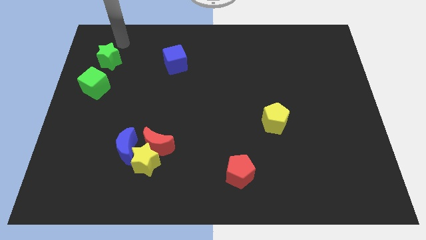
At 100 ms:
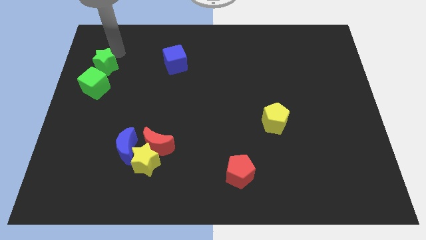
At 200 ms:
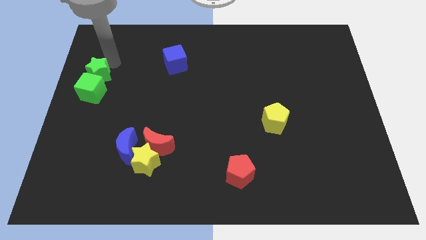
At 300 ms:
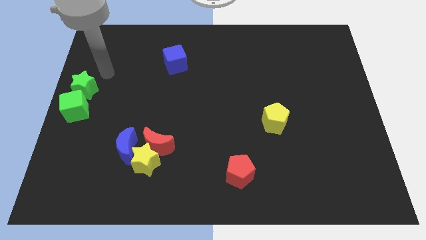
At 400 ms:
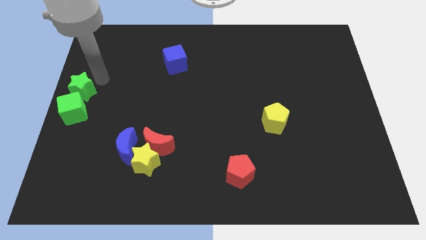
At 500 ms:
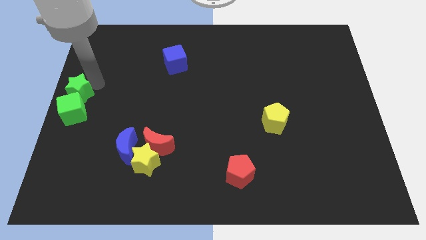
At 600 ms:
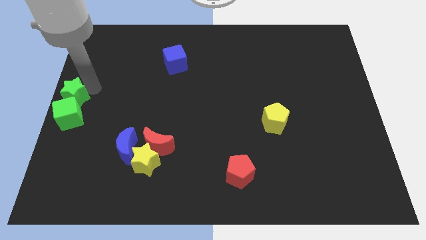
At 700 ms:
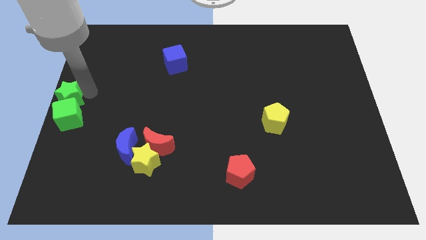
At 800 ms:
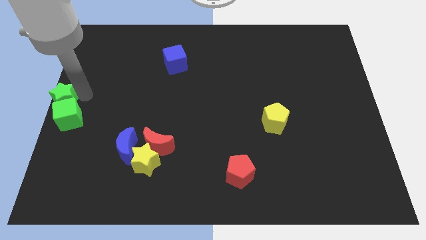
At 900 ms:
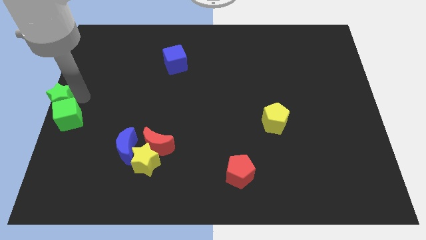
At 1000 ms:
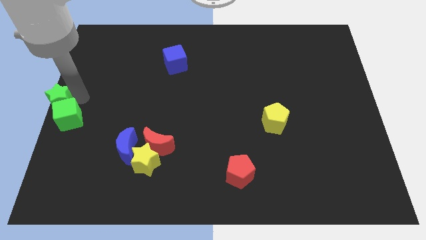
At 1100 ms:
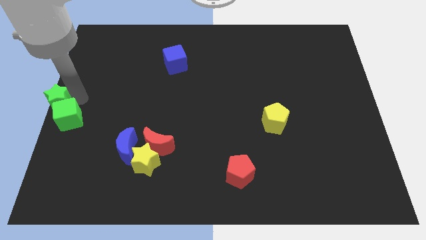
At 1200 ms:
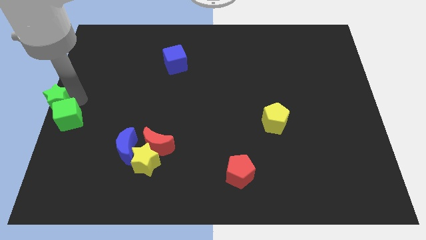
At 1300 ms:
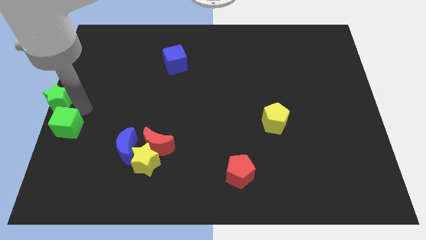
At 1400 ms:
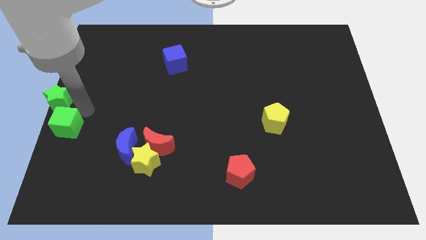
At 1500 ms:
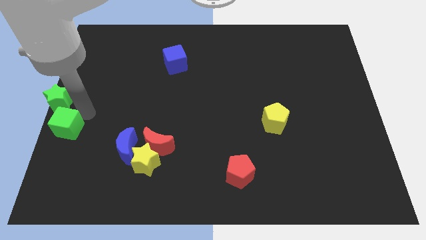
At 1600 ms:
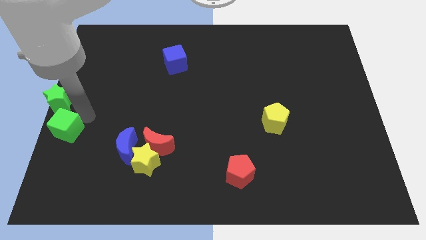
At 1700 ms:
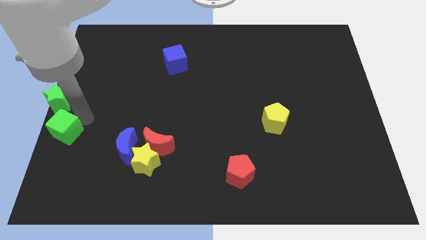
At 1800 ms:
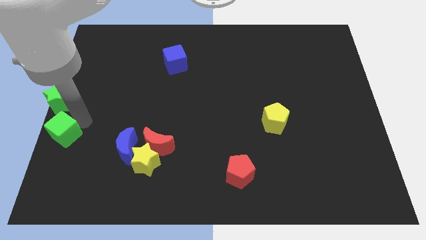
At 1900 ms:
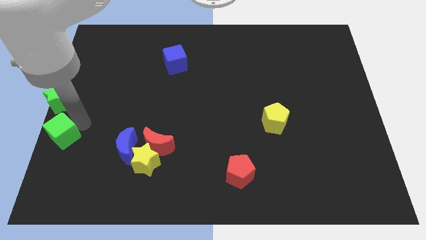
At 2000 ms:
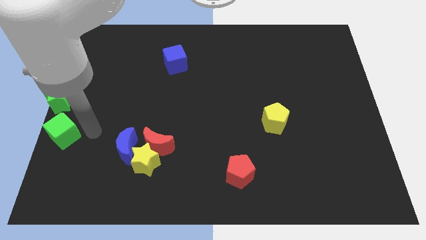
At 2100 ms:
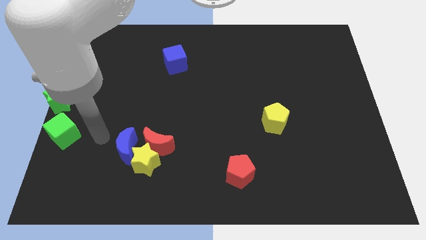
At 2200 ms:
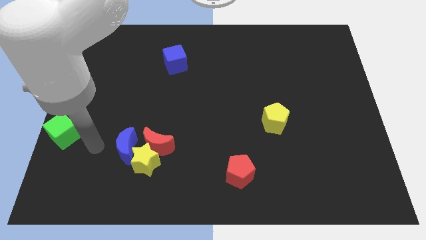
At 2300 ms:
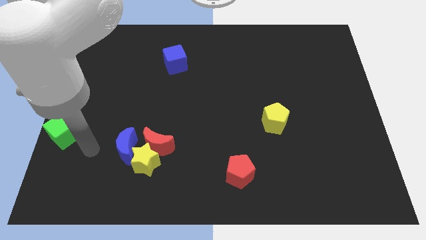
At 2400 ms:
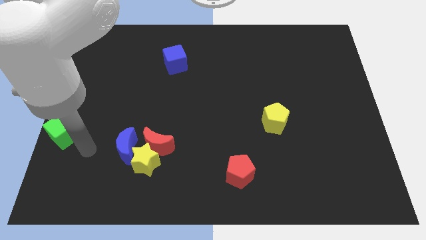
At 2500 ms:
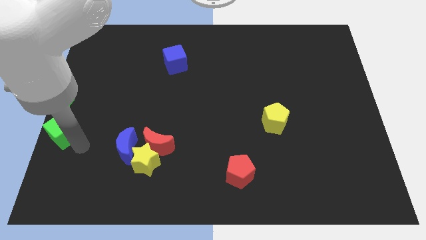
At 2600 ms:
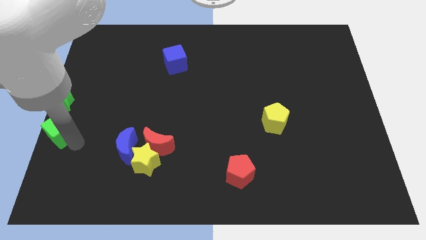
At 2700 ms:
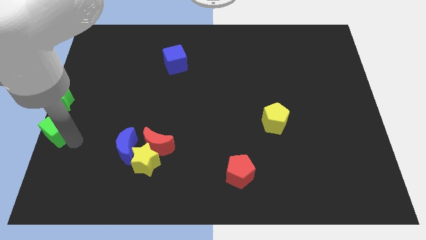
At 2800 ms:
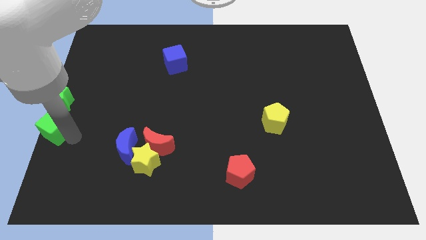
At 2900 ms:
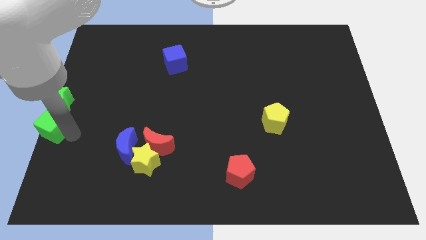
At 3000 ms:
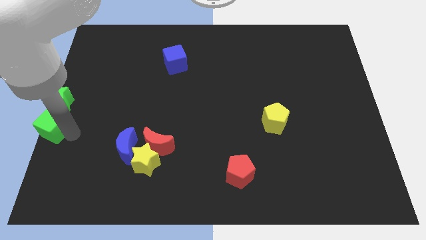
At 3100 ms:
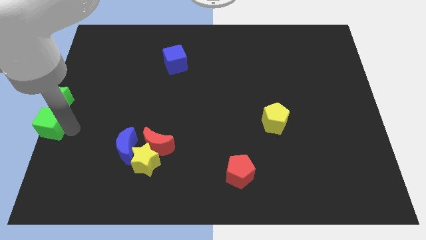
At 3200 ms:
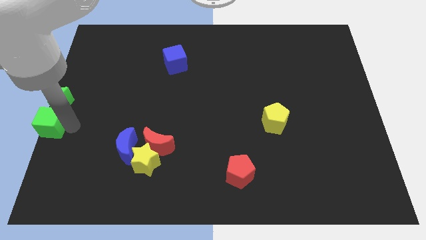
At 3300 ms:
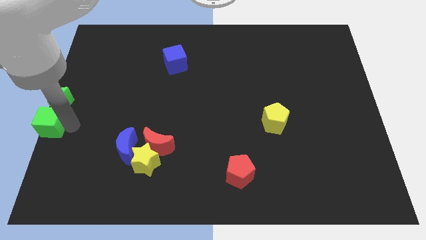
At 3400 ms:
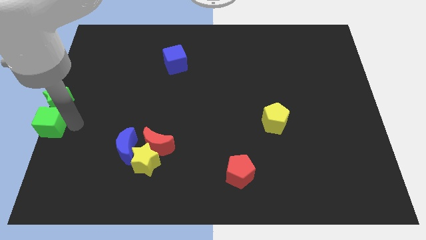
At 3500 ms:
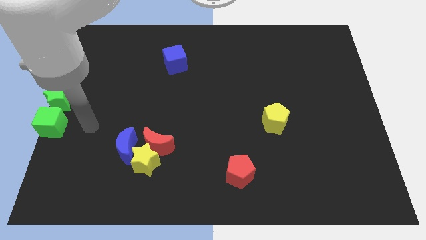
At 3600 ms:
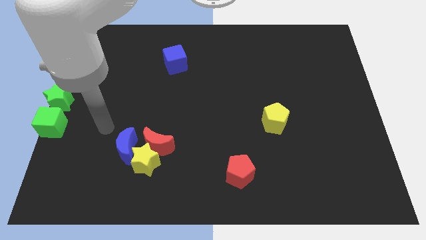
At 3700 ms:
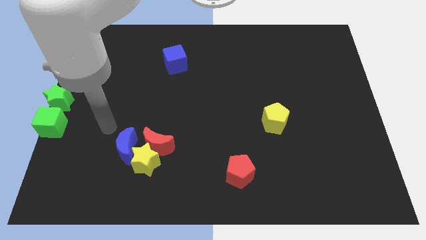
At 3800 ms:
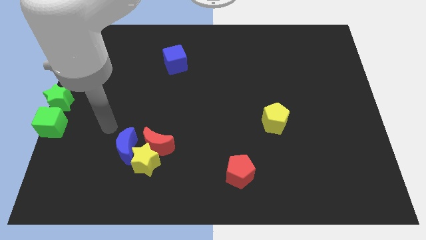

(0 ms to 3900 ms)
place the green cube to the bottom of green star

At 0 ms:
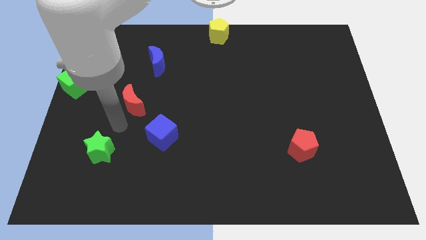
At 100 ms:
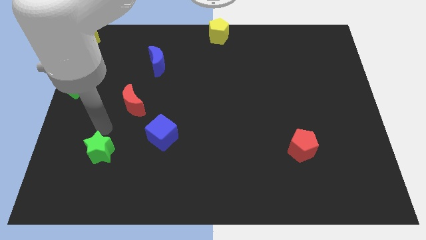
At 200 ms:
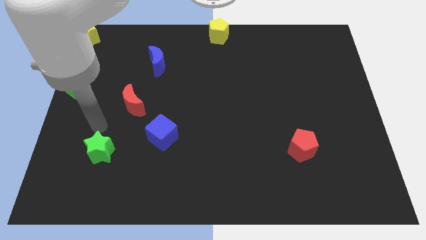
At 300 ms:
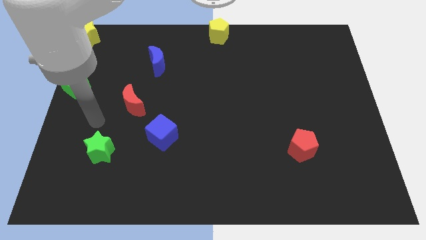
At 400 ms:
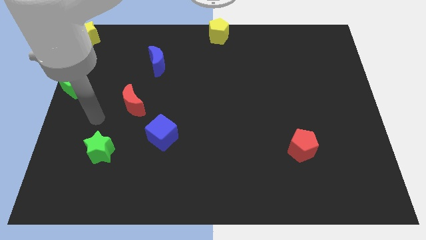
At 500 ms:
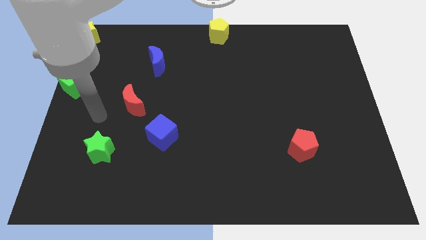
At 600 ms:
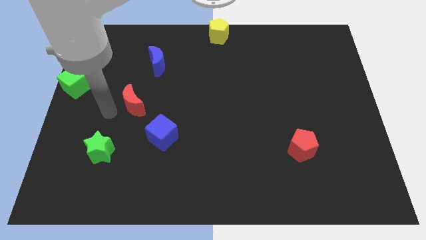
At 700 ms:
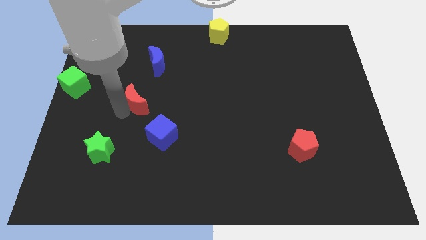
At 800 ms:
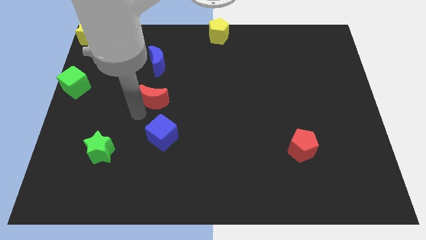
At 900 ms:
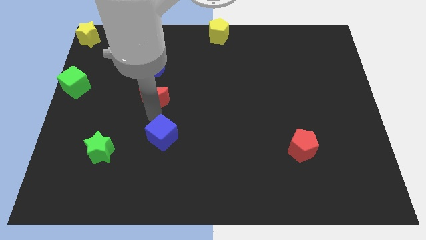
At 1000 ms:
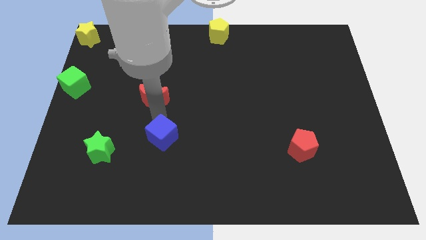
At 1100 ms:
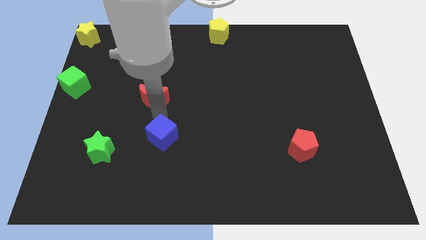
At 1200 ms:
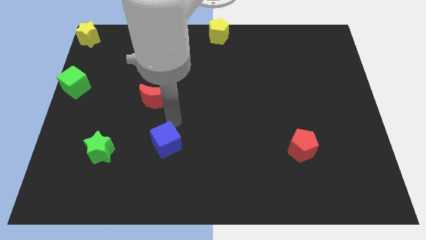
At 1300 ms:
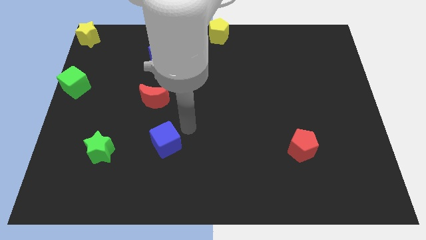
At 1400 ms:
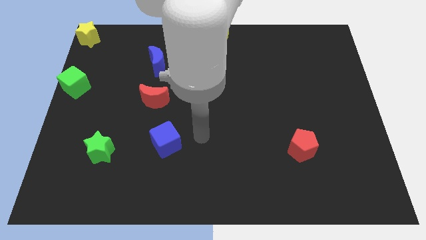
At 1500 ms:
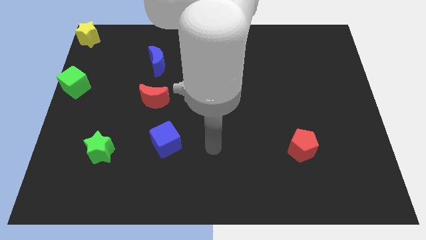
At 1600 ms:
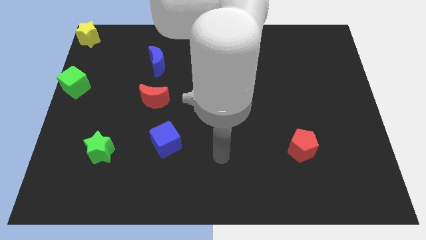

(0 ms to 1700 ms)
place the red moon in between the blue moon and blue cube

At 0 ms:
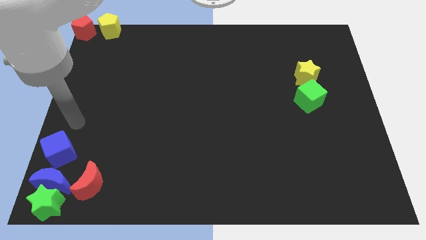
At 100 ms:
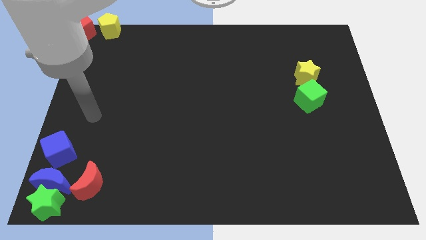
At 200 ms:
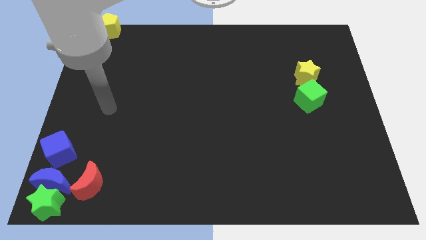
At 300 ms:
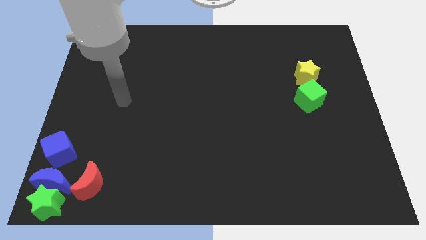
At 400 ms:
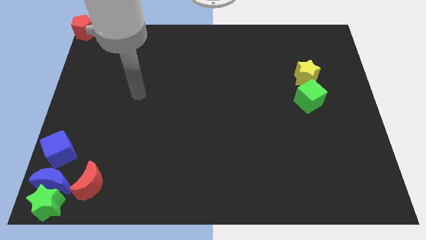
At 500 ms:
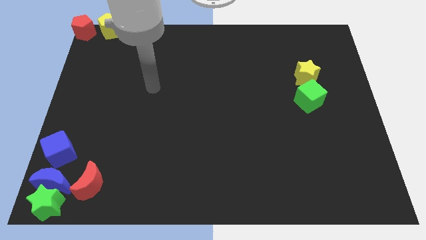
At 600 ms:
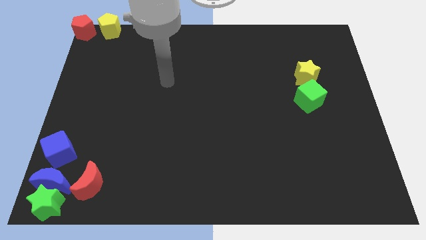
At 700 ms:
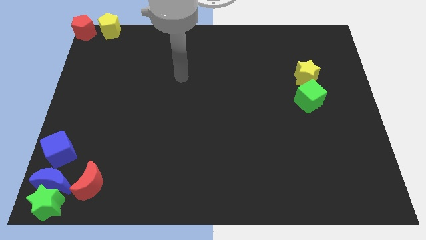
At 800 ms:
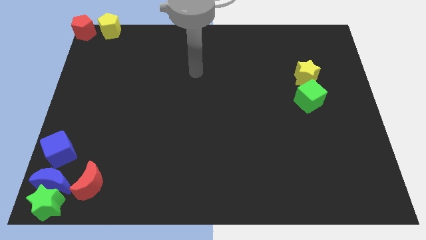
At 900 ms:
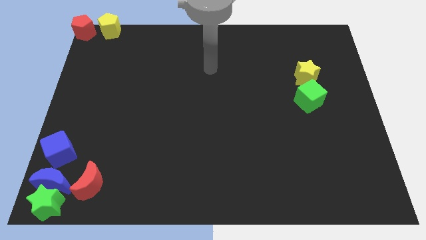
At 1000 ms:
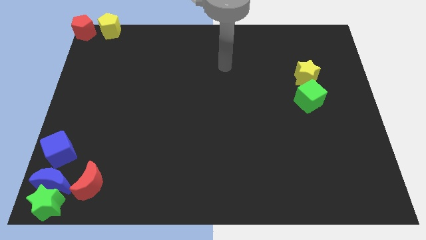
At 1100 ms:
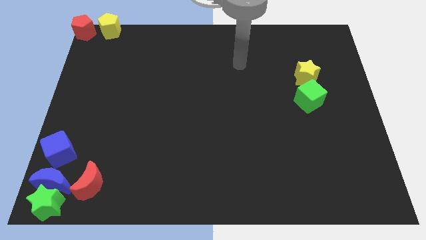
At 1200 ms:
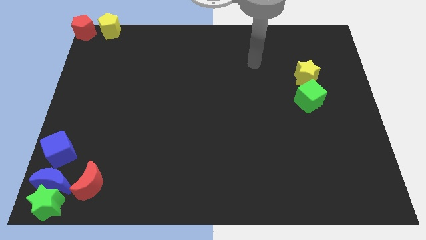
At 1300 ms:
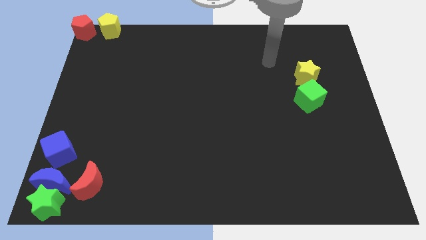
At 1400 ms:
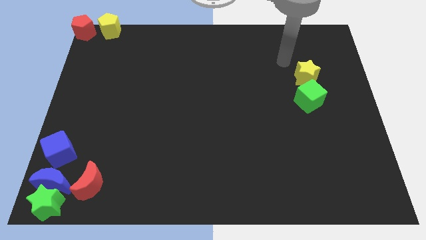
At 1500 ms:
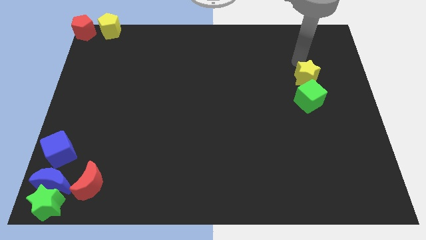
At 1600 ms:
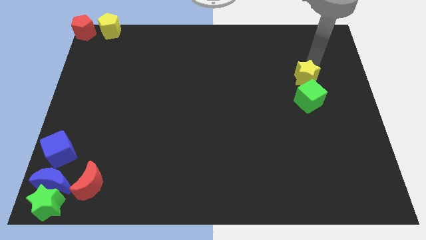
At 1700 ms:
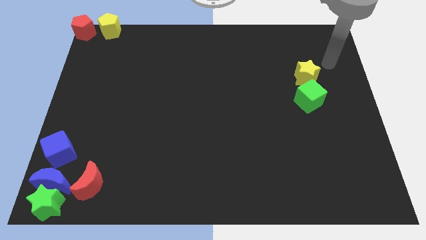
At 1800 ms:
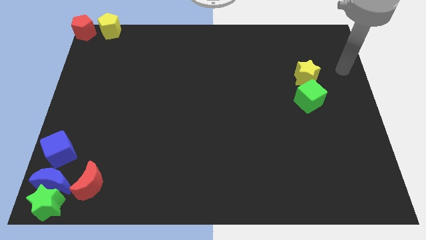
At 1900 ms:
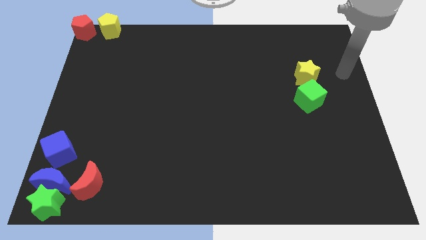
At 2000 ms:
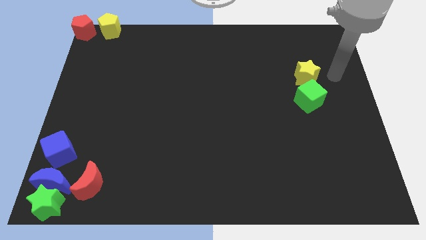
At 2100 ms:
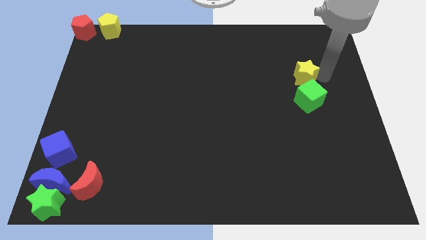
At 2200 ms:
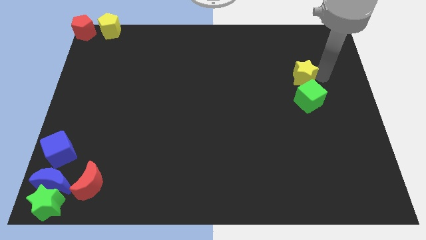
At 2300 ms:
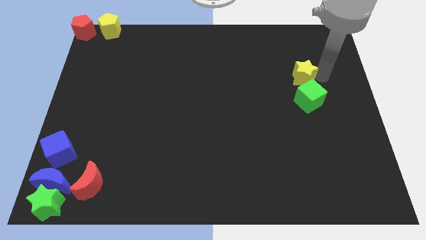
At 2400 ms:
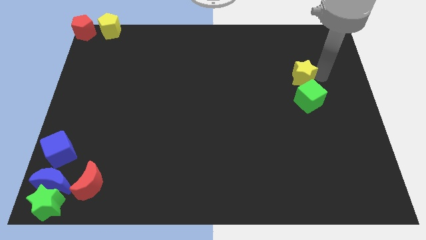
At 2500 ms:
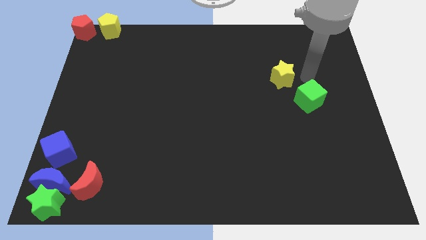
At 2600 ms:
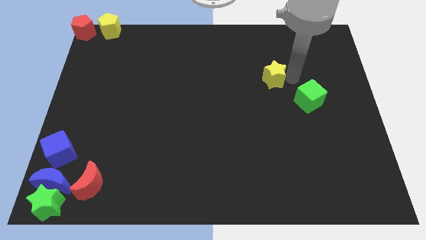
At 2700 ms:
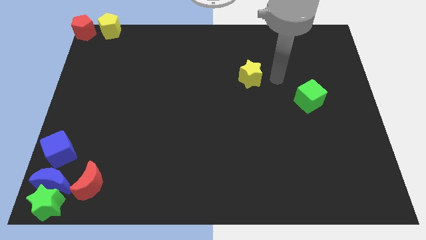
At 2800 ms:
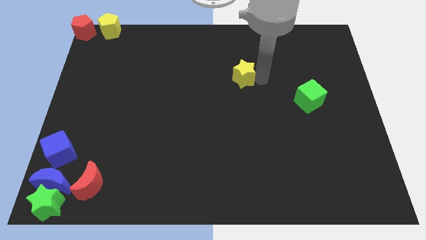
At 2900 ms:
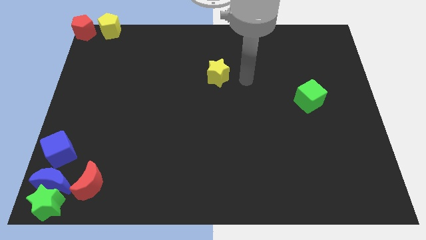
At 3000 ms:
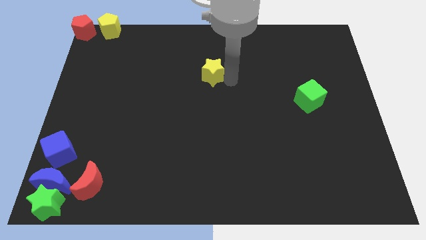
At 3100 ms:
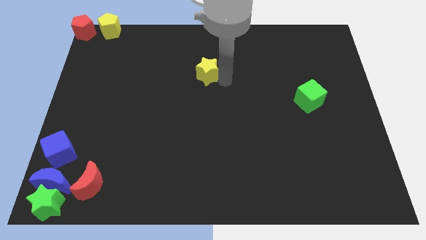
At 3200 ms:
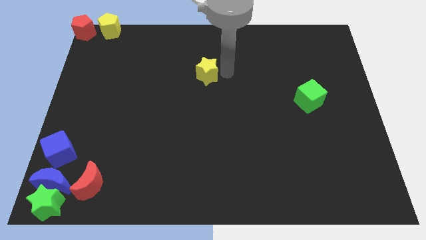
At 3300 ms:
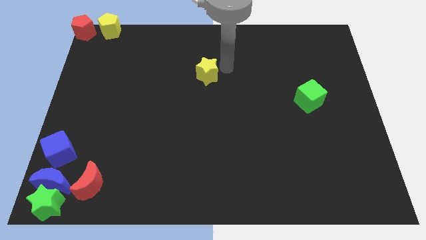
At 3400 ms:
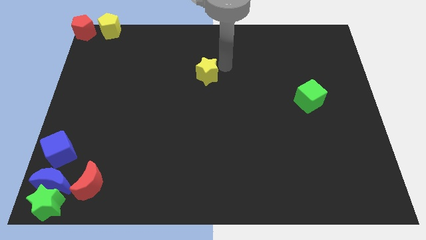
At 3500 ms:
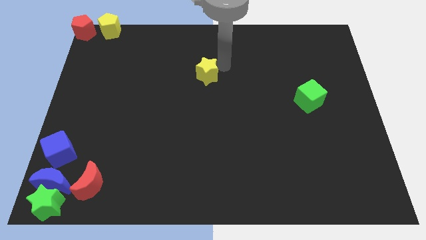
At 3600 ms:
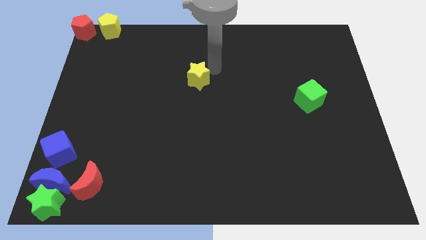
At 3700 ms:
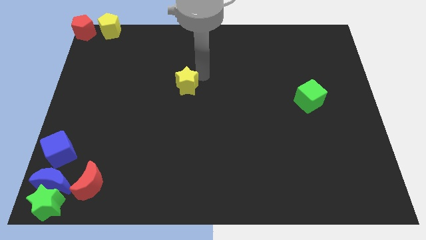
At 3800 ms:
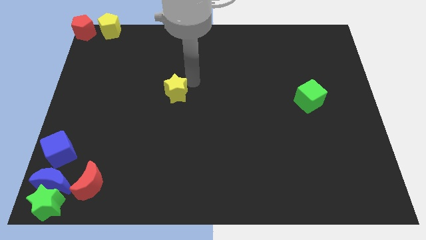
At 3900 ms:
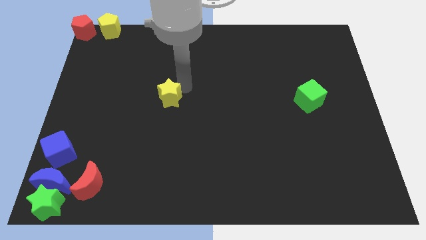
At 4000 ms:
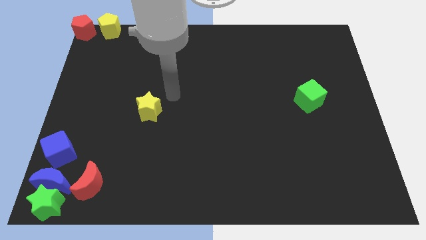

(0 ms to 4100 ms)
separate yellow star from the green cube
